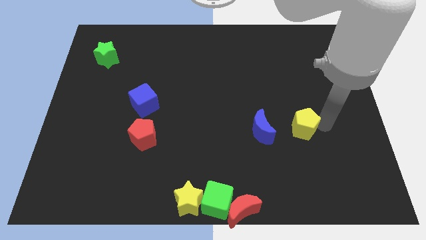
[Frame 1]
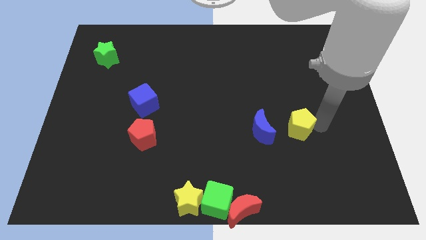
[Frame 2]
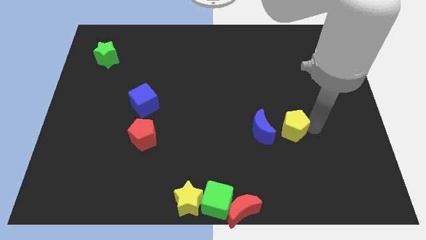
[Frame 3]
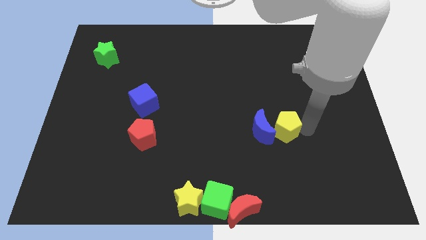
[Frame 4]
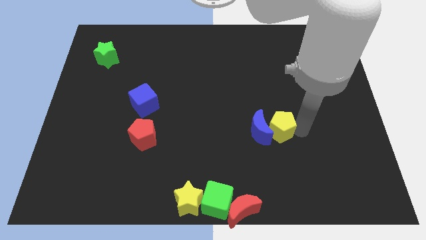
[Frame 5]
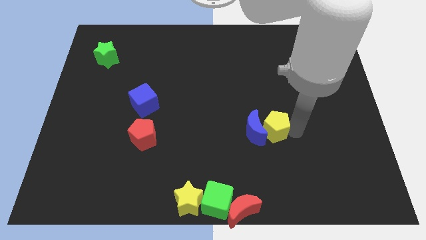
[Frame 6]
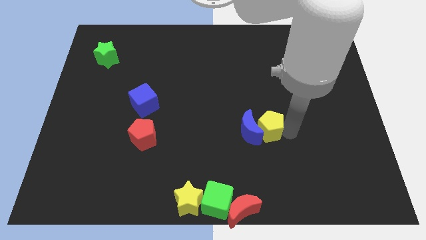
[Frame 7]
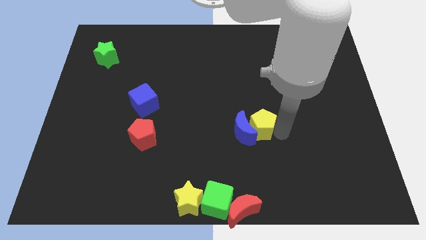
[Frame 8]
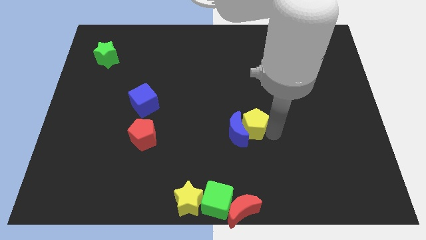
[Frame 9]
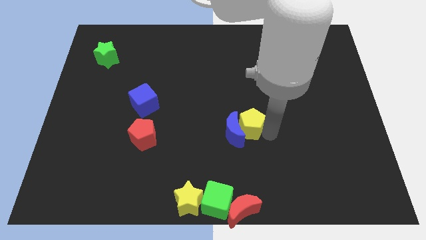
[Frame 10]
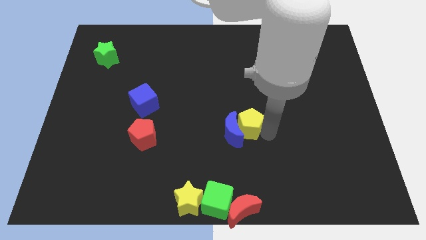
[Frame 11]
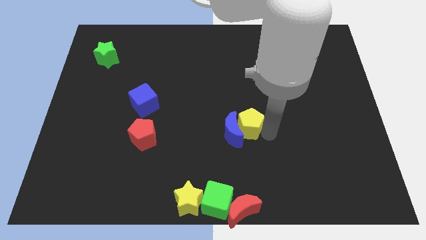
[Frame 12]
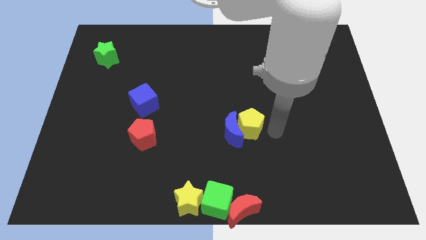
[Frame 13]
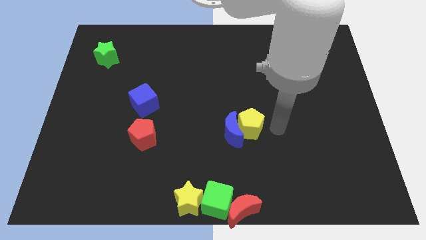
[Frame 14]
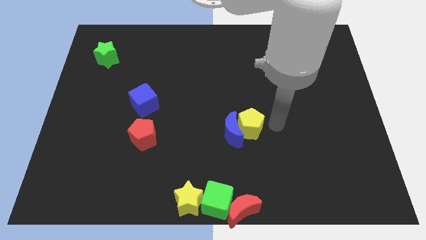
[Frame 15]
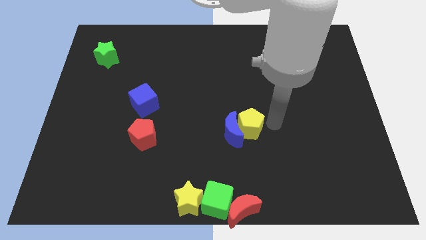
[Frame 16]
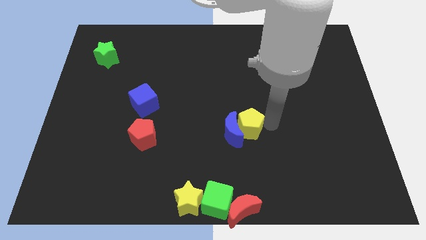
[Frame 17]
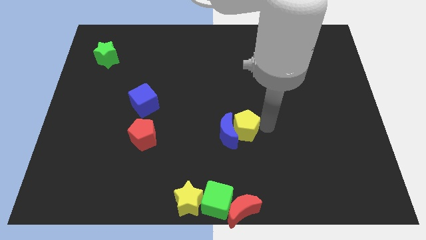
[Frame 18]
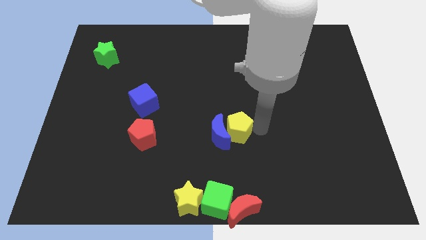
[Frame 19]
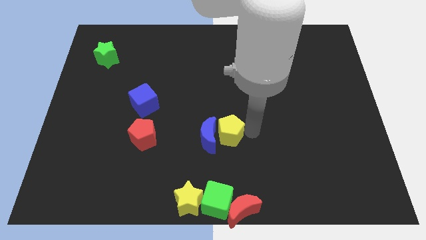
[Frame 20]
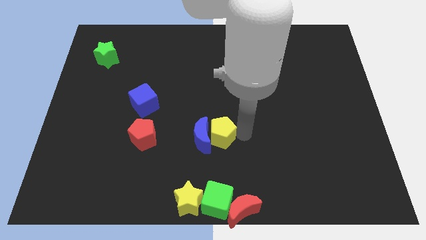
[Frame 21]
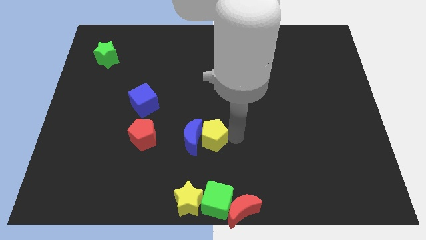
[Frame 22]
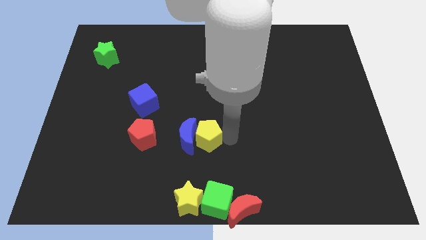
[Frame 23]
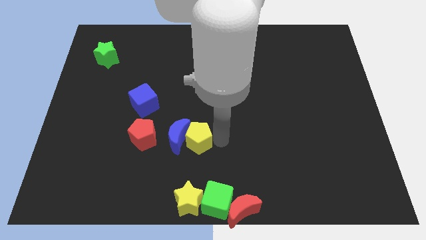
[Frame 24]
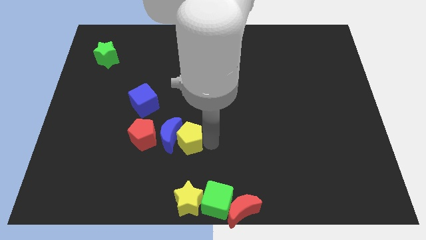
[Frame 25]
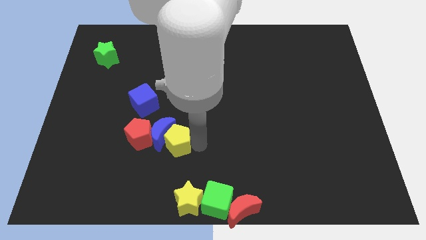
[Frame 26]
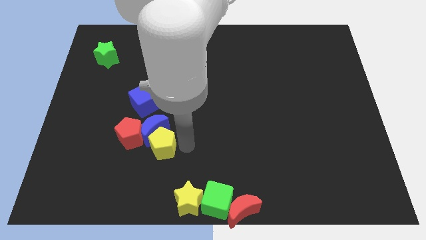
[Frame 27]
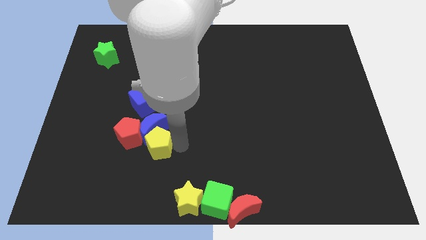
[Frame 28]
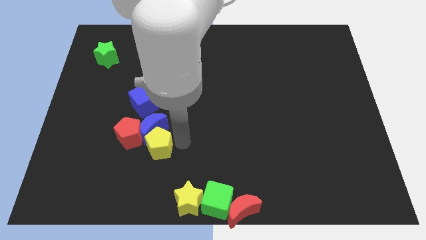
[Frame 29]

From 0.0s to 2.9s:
move the yellow pentagon and blue crescent to the left of red pentagon

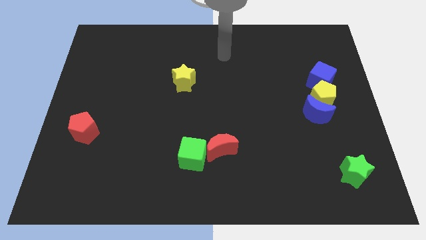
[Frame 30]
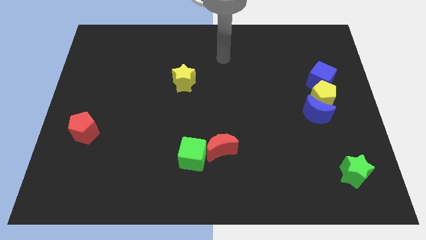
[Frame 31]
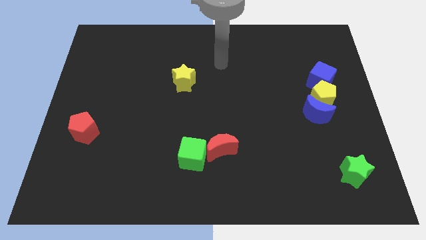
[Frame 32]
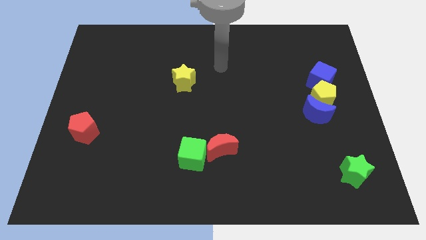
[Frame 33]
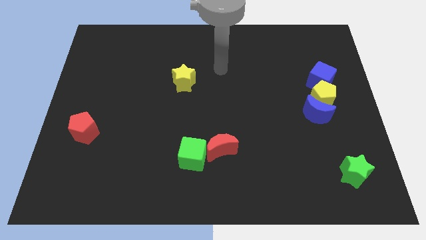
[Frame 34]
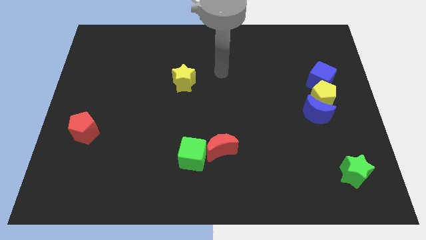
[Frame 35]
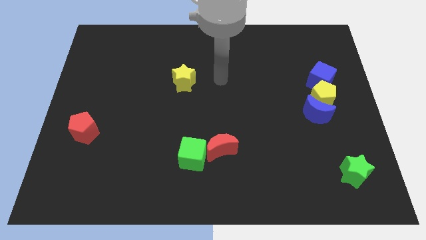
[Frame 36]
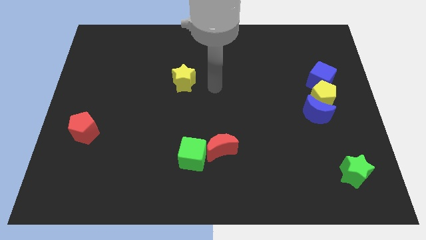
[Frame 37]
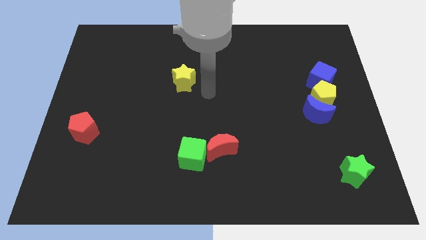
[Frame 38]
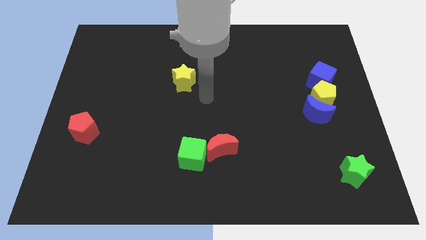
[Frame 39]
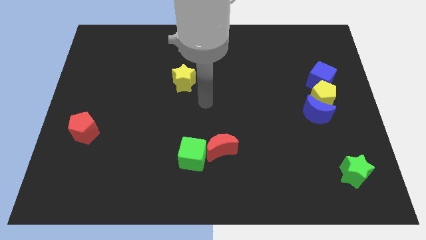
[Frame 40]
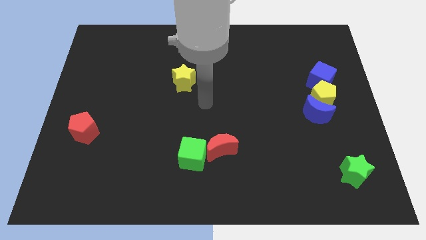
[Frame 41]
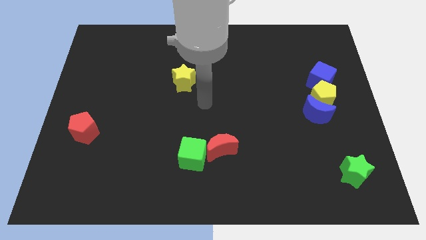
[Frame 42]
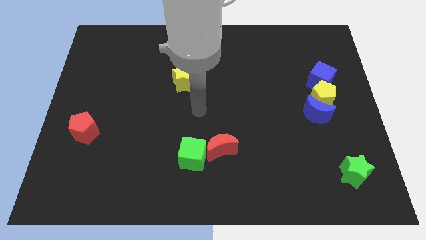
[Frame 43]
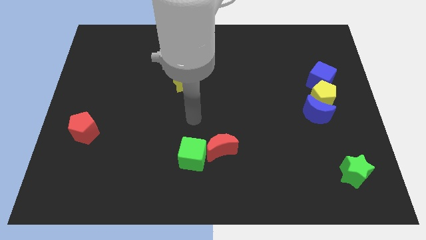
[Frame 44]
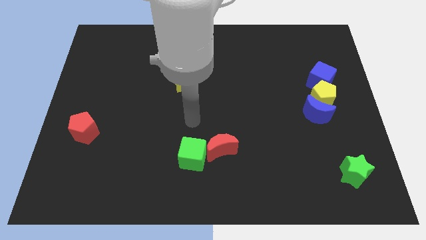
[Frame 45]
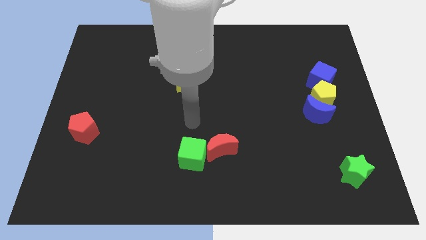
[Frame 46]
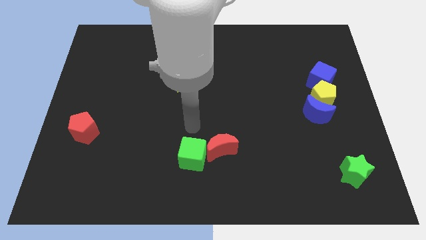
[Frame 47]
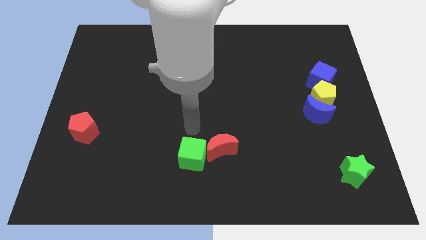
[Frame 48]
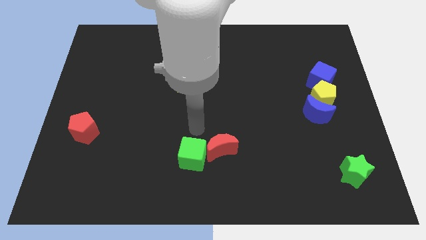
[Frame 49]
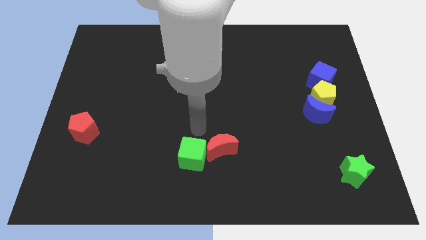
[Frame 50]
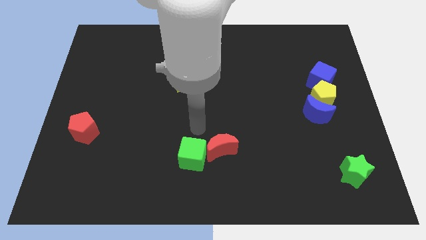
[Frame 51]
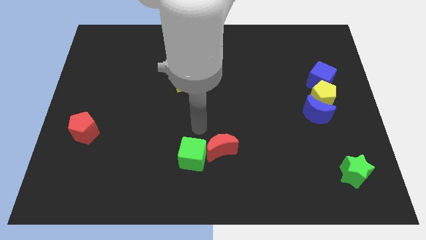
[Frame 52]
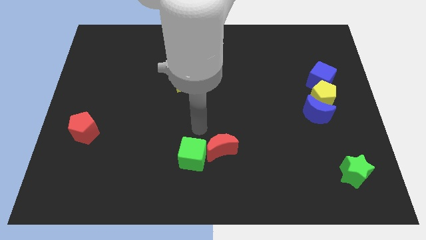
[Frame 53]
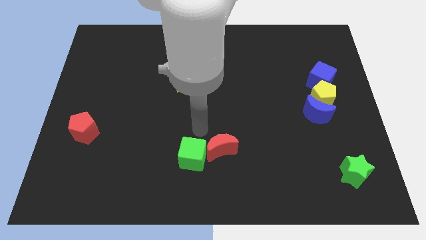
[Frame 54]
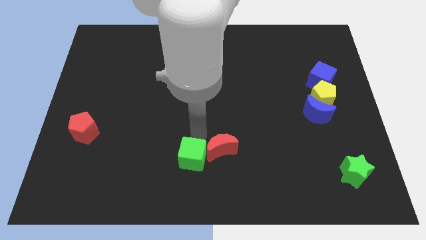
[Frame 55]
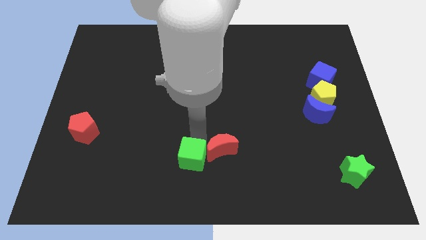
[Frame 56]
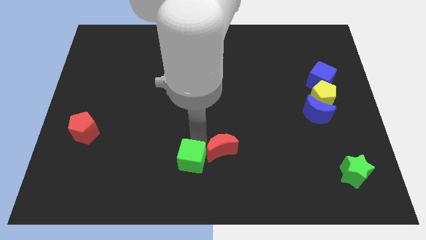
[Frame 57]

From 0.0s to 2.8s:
place your arm above the green cube

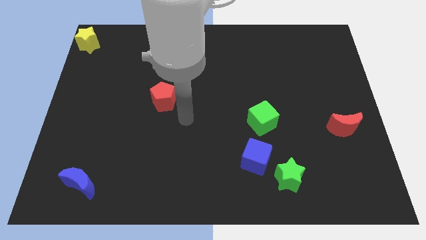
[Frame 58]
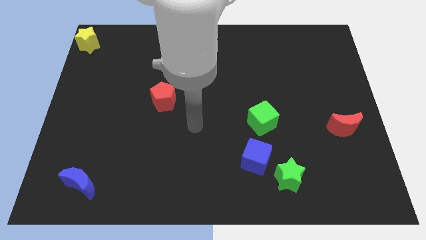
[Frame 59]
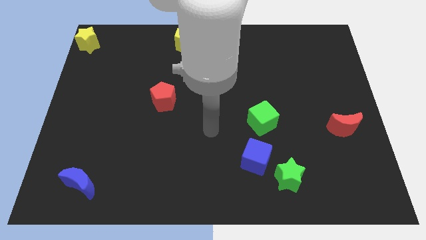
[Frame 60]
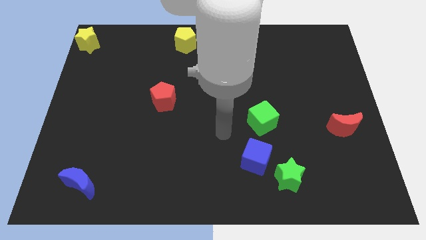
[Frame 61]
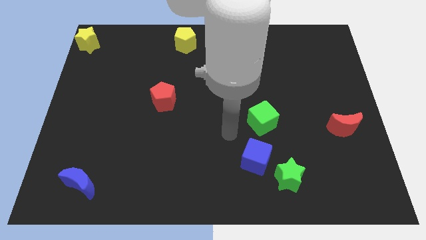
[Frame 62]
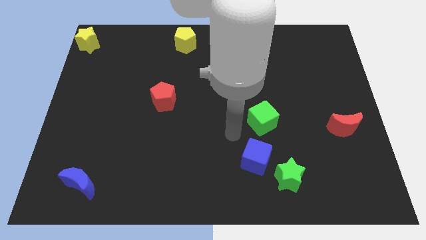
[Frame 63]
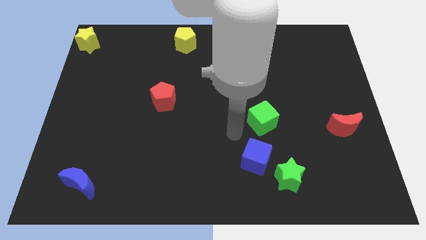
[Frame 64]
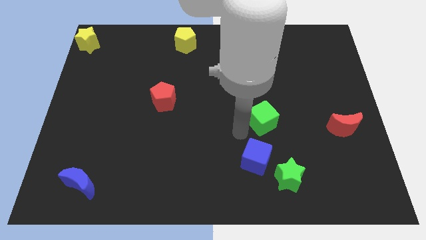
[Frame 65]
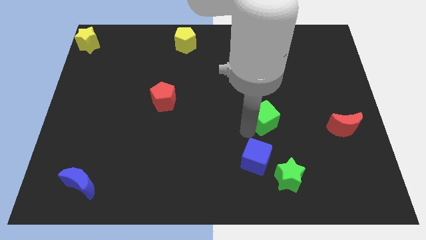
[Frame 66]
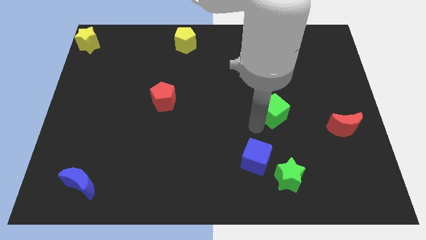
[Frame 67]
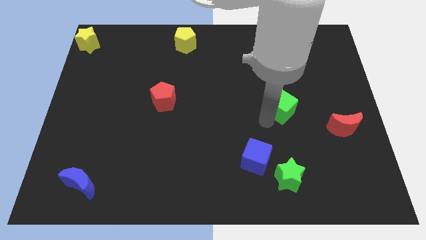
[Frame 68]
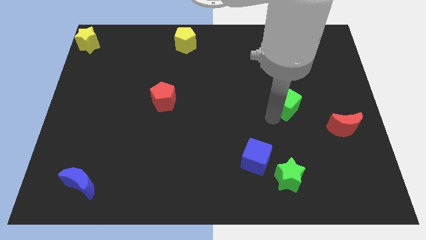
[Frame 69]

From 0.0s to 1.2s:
move green cube slightly to the right

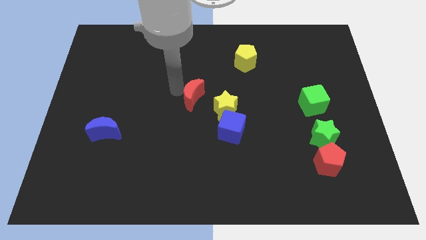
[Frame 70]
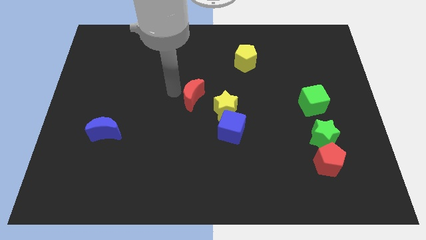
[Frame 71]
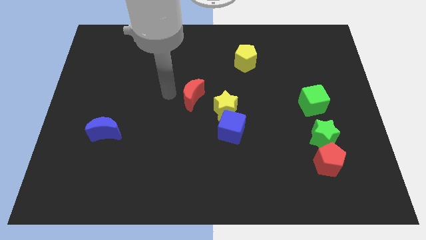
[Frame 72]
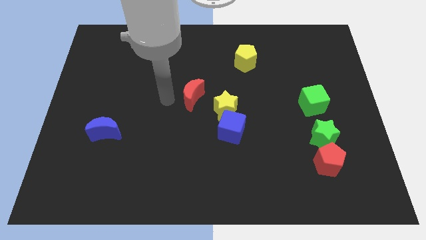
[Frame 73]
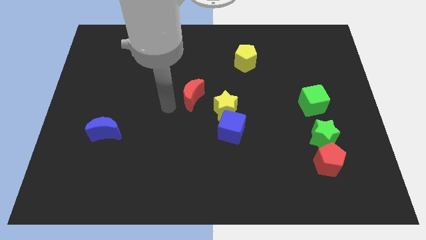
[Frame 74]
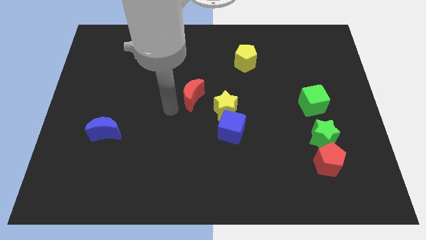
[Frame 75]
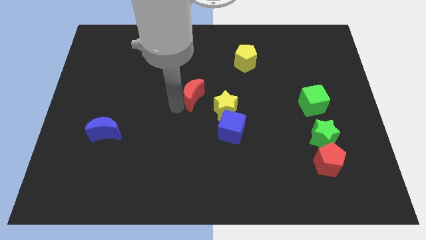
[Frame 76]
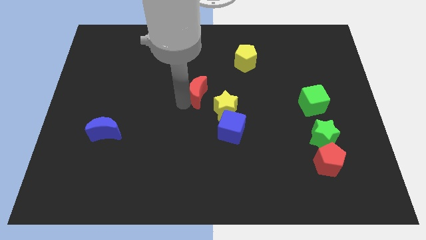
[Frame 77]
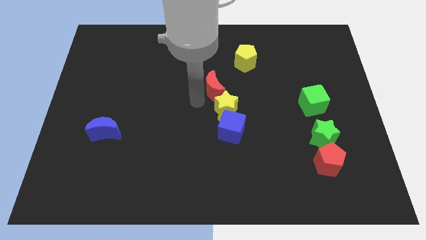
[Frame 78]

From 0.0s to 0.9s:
push the red crescent into yellow star

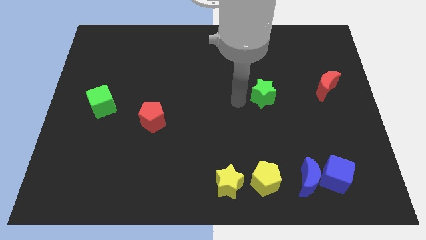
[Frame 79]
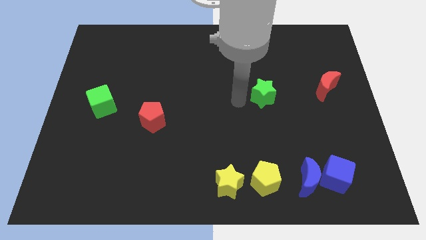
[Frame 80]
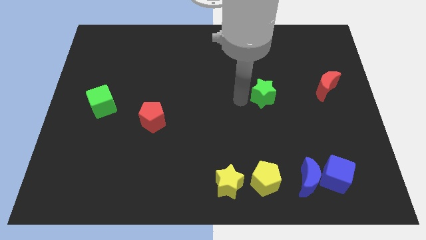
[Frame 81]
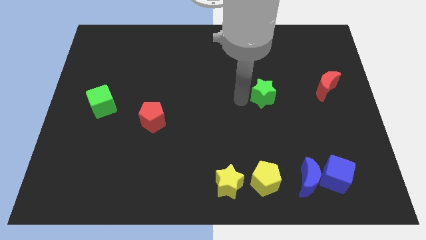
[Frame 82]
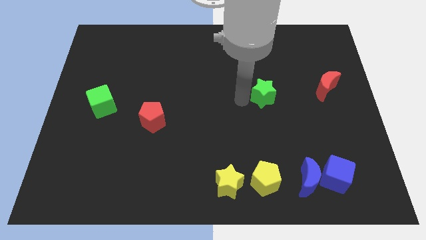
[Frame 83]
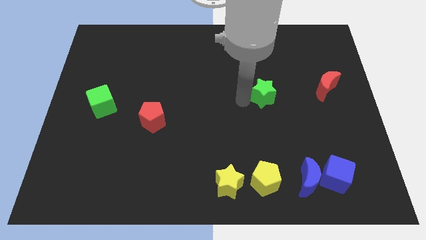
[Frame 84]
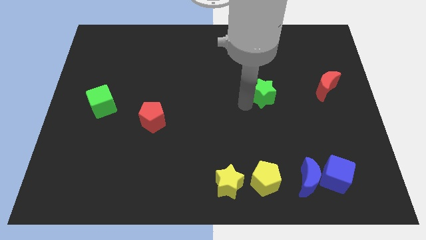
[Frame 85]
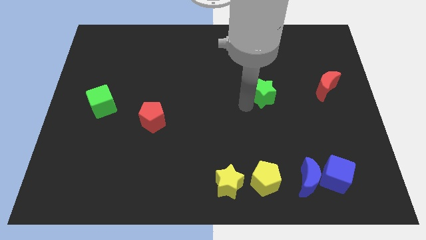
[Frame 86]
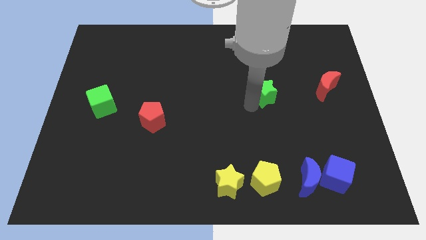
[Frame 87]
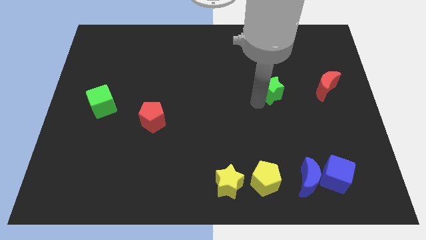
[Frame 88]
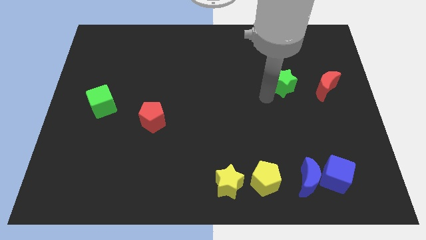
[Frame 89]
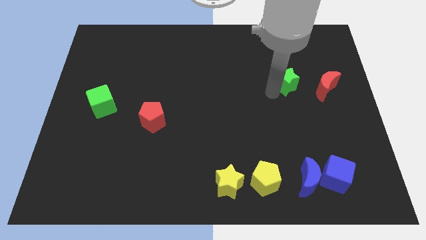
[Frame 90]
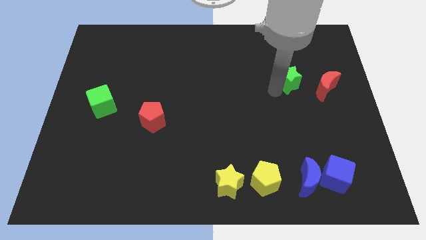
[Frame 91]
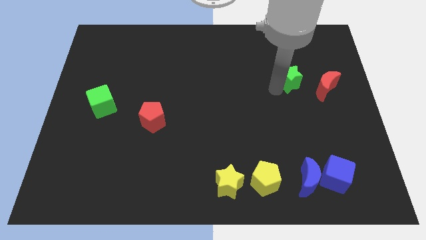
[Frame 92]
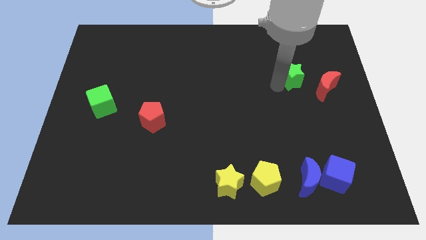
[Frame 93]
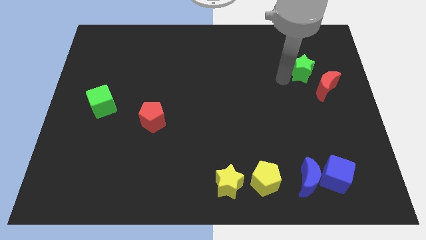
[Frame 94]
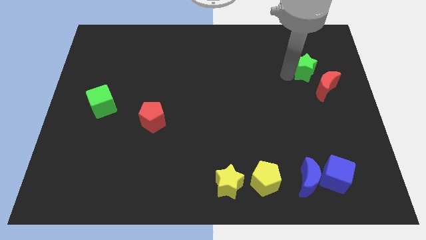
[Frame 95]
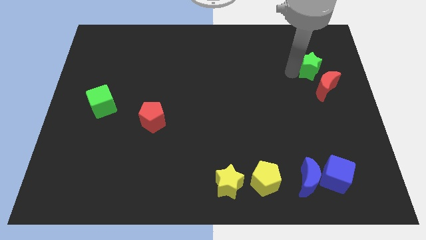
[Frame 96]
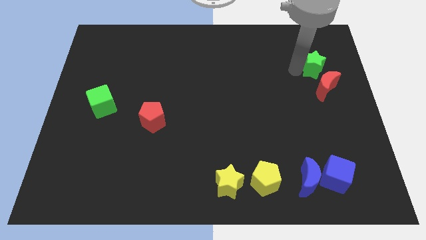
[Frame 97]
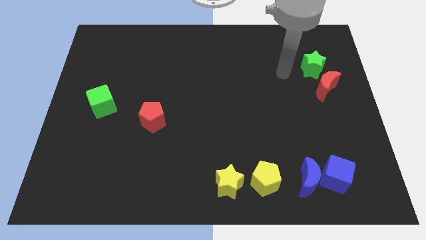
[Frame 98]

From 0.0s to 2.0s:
place the green star near to red moon
